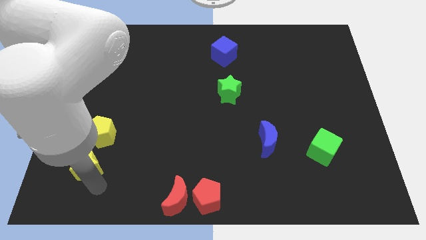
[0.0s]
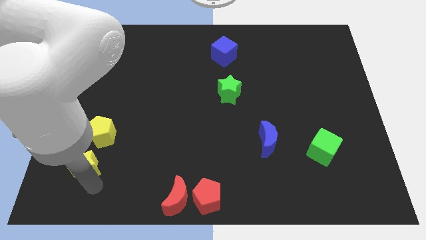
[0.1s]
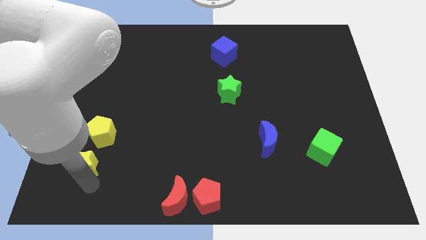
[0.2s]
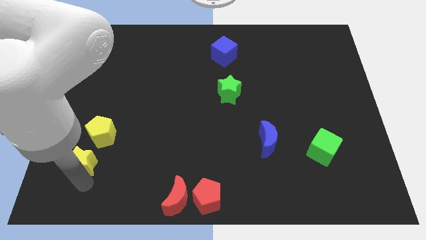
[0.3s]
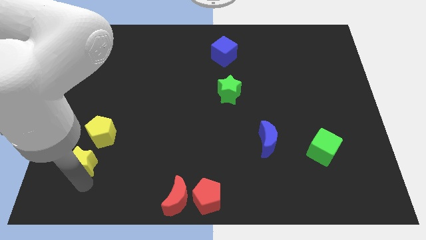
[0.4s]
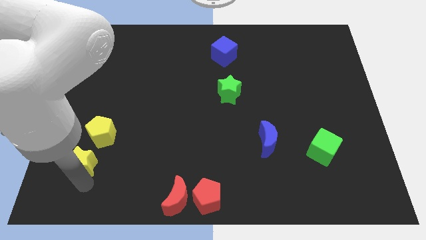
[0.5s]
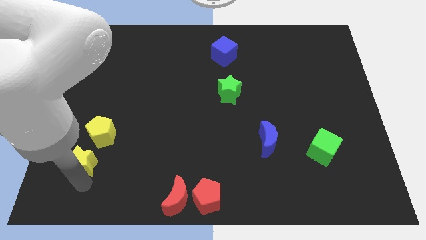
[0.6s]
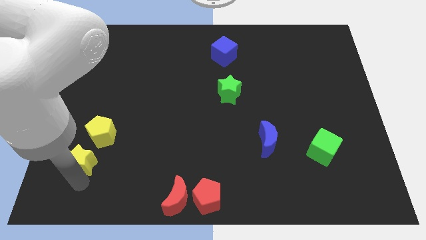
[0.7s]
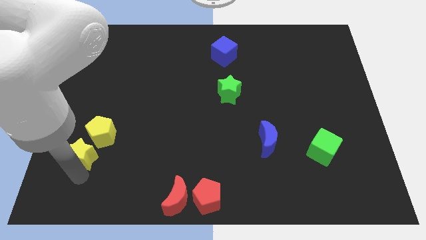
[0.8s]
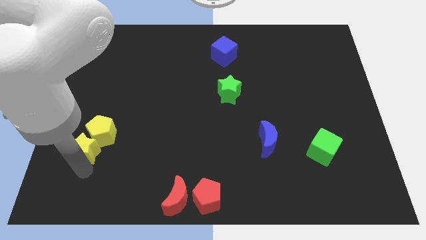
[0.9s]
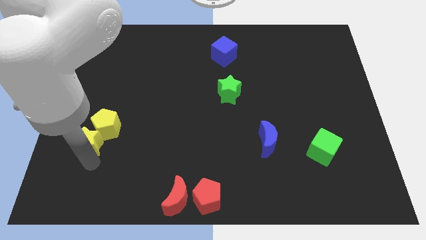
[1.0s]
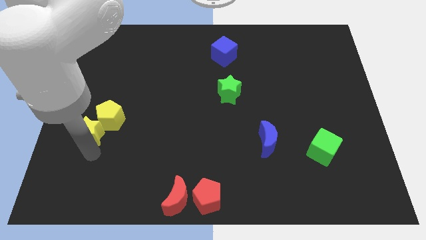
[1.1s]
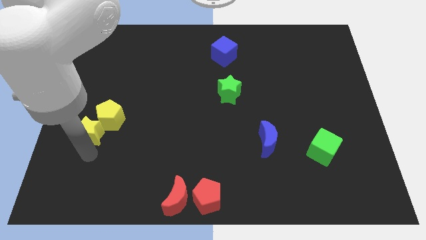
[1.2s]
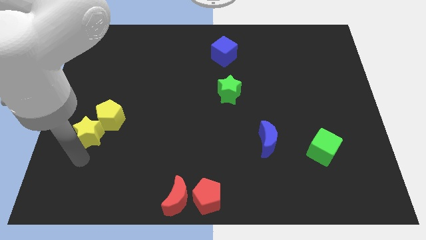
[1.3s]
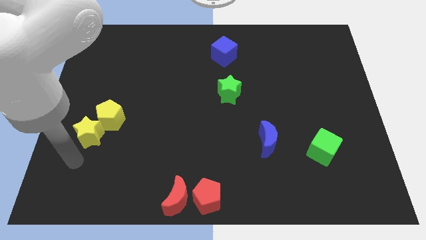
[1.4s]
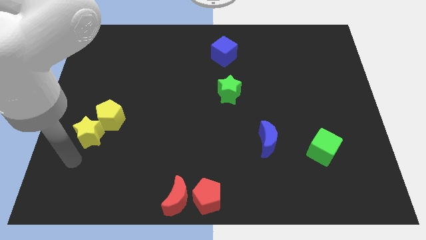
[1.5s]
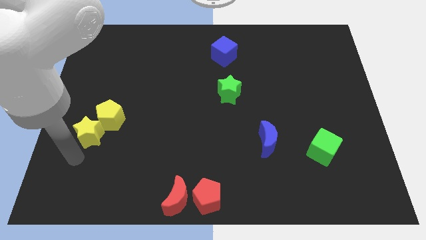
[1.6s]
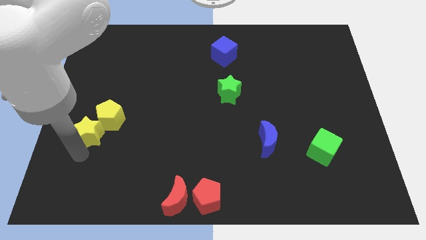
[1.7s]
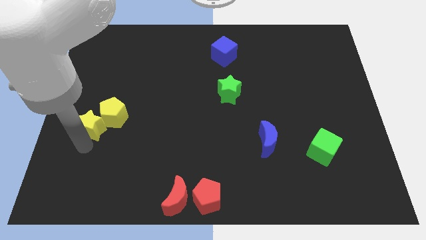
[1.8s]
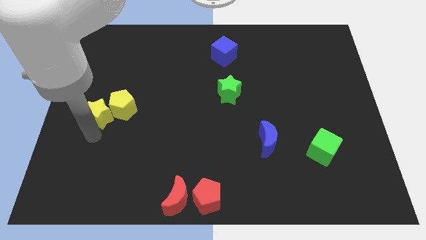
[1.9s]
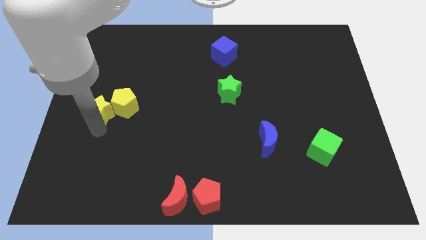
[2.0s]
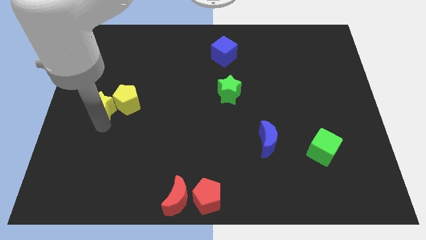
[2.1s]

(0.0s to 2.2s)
push the yellow star into the yellow pentagon

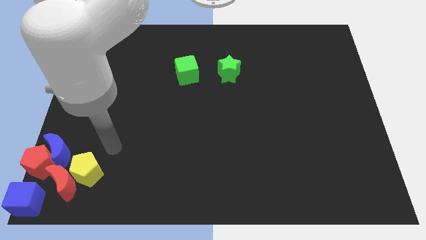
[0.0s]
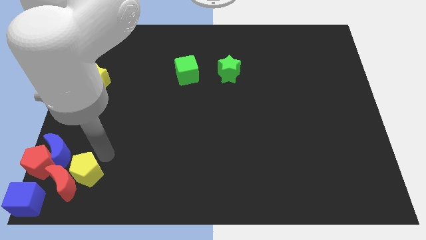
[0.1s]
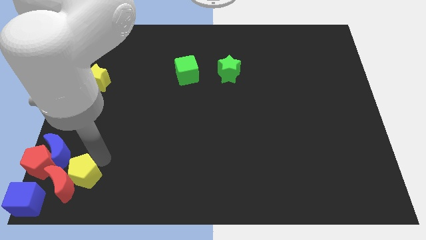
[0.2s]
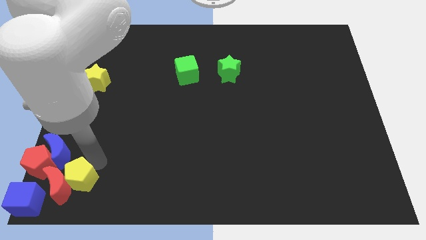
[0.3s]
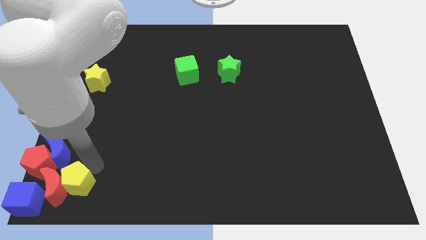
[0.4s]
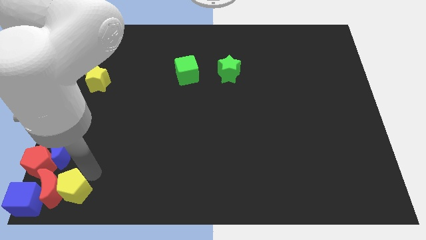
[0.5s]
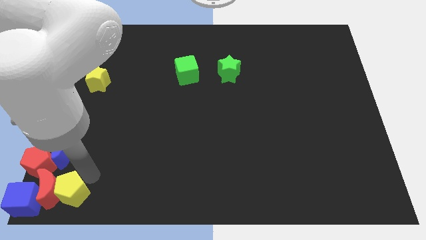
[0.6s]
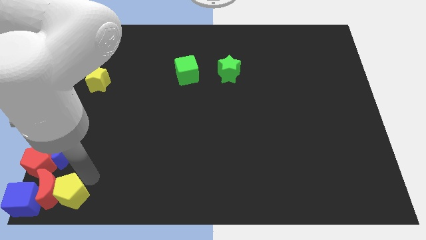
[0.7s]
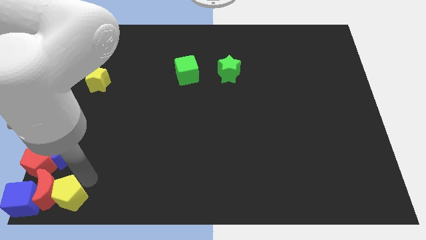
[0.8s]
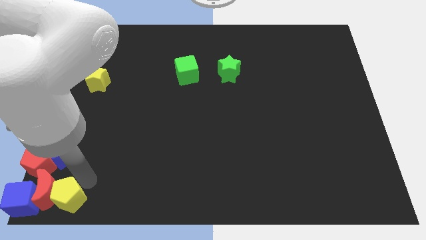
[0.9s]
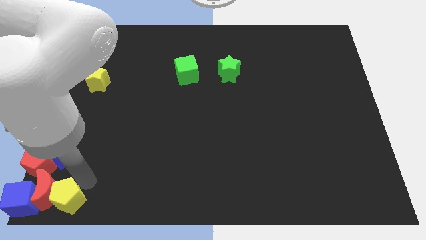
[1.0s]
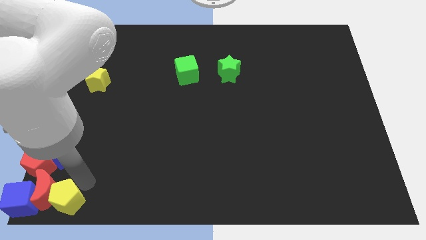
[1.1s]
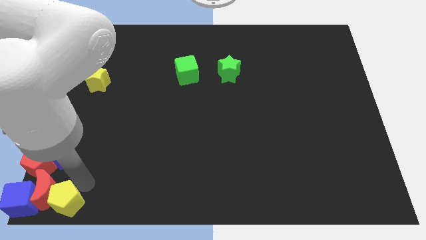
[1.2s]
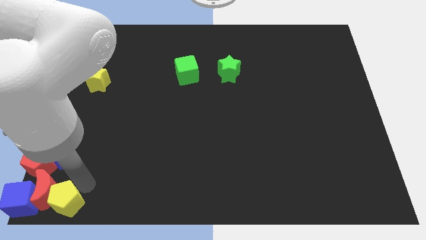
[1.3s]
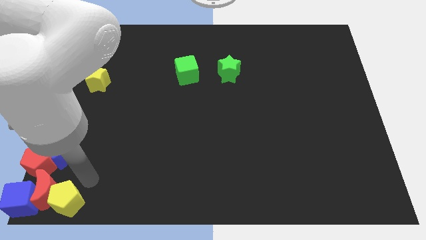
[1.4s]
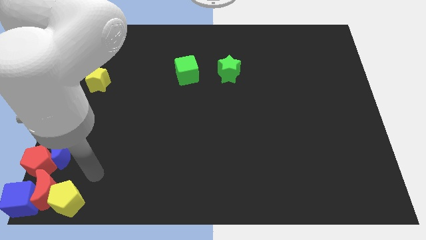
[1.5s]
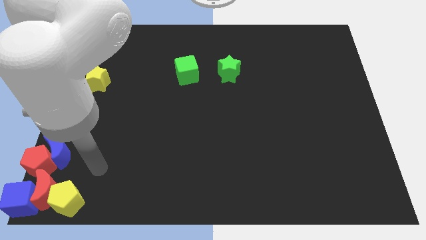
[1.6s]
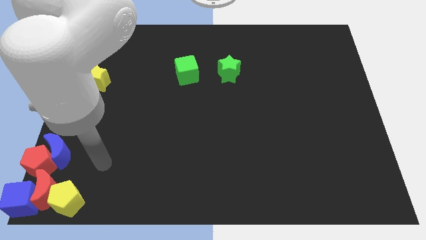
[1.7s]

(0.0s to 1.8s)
push red moonyellow pentagon into the blue cube

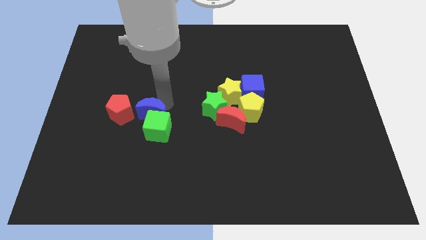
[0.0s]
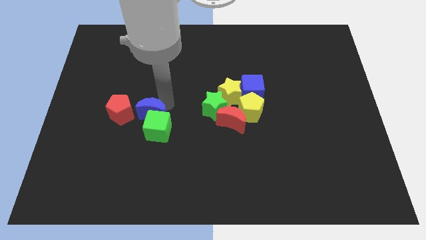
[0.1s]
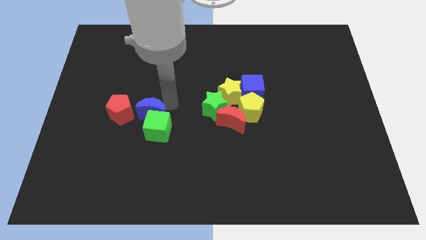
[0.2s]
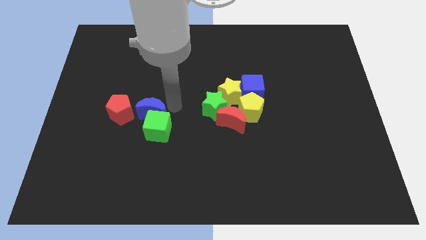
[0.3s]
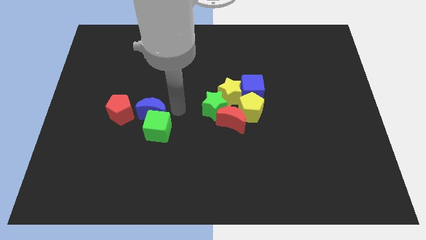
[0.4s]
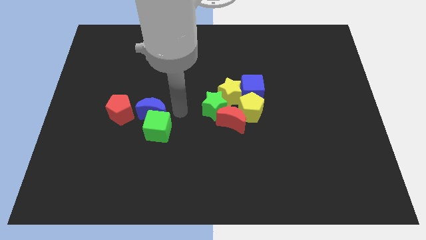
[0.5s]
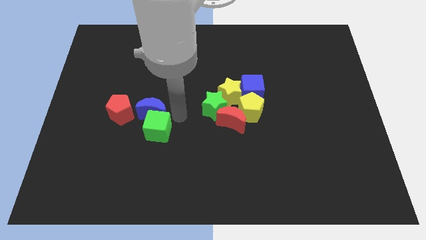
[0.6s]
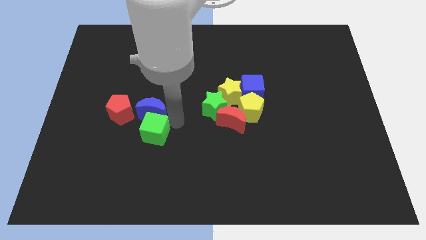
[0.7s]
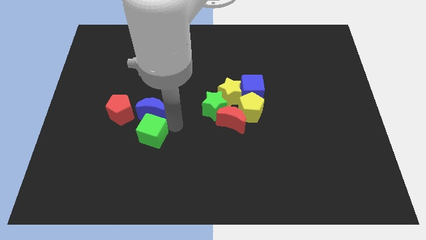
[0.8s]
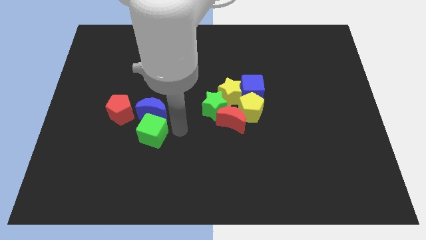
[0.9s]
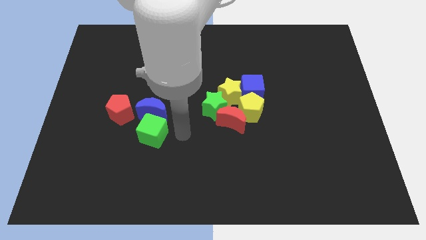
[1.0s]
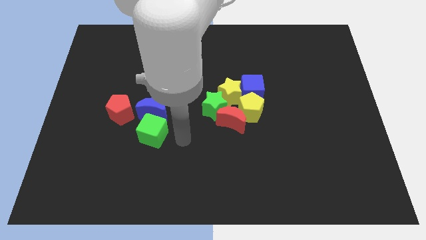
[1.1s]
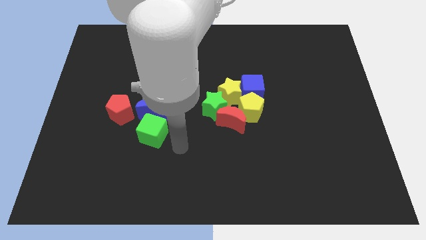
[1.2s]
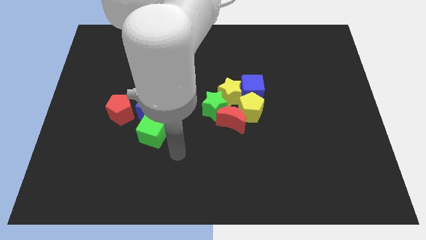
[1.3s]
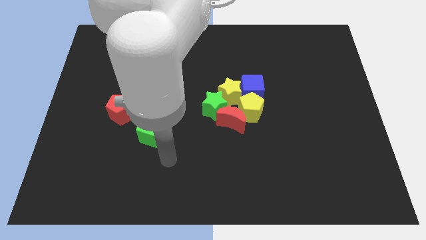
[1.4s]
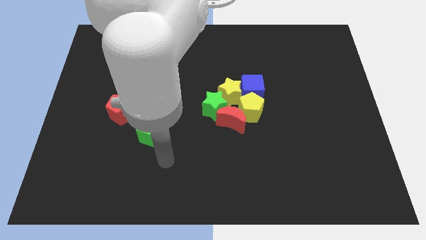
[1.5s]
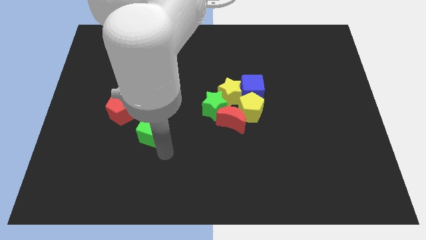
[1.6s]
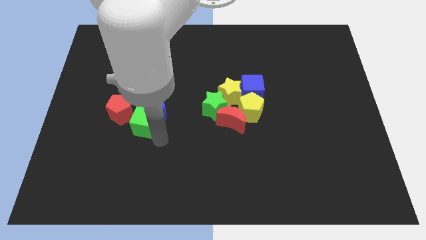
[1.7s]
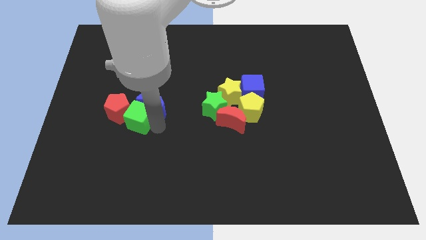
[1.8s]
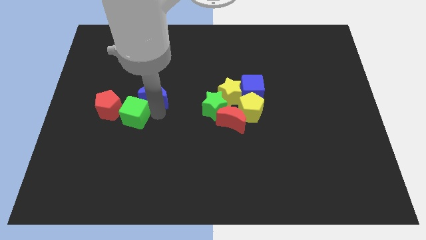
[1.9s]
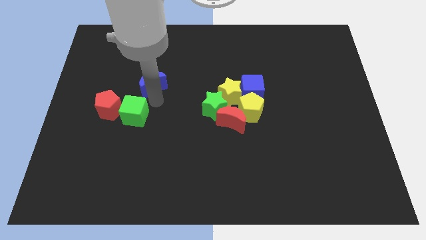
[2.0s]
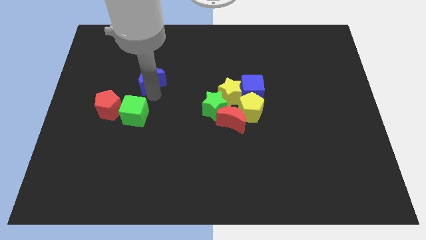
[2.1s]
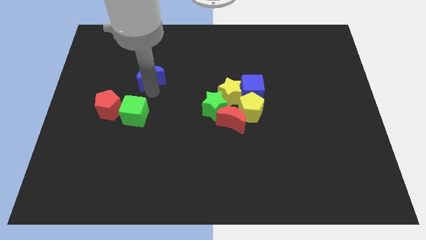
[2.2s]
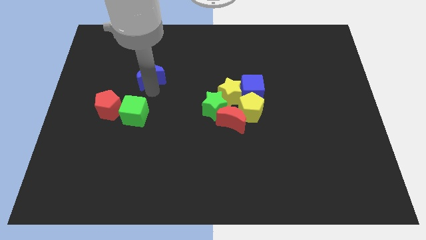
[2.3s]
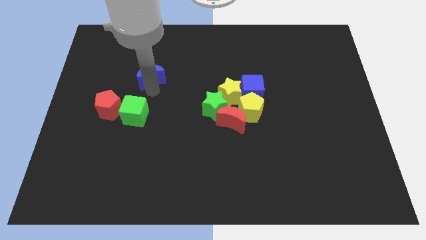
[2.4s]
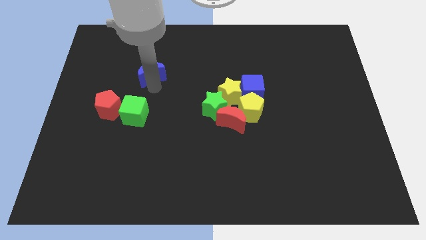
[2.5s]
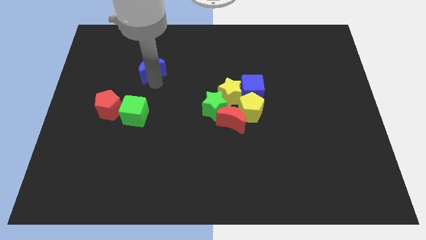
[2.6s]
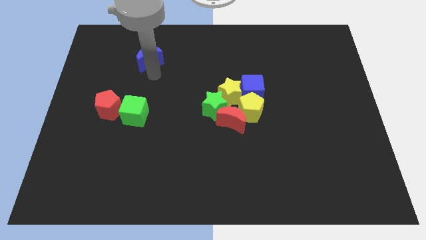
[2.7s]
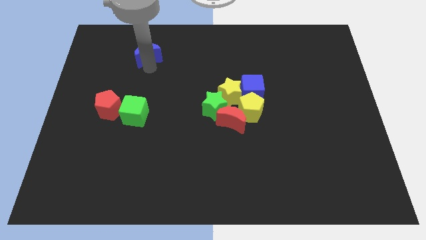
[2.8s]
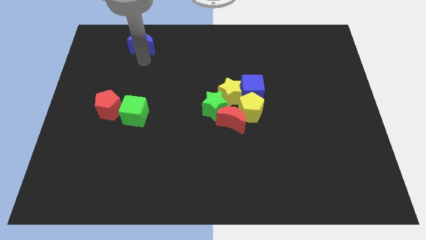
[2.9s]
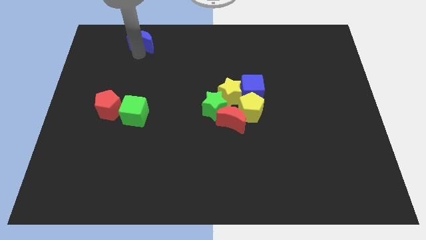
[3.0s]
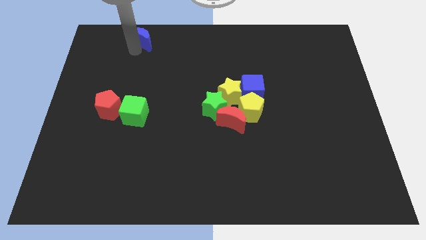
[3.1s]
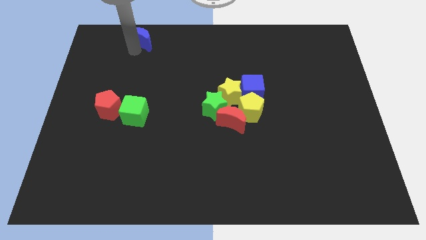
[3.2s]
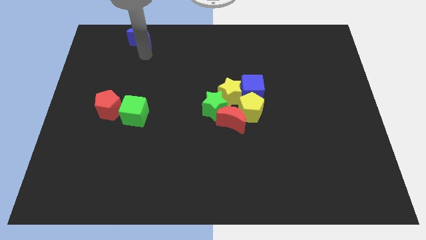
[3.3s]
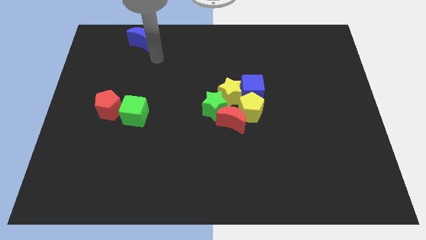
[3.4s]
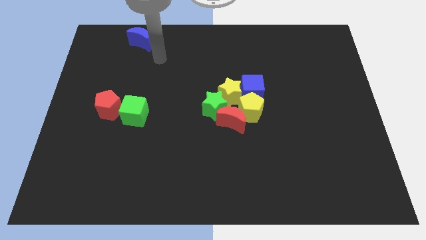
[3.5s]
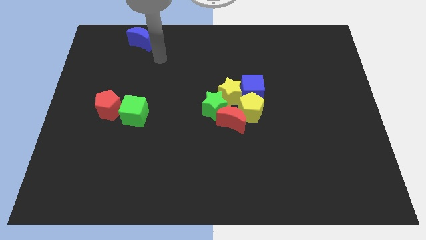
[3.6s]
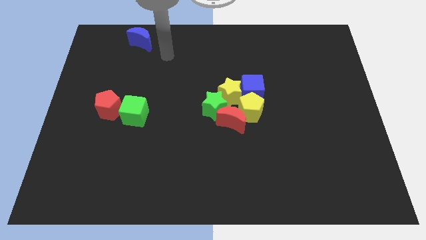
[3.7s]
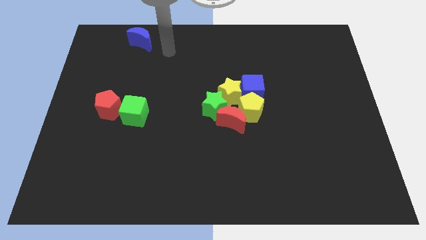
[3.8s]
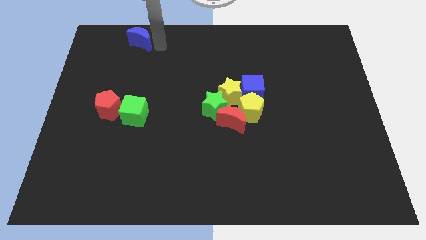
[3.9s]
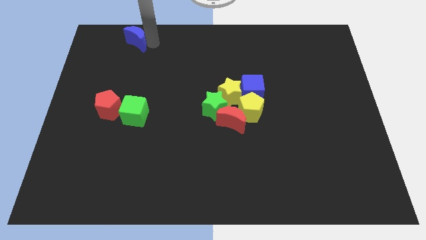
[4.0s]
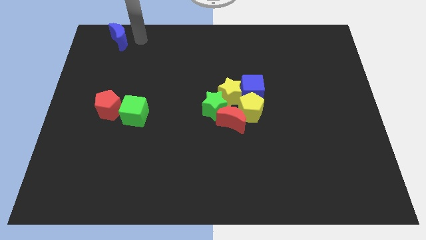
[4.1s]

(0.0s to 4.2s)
move blue moon to the top side

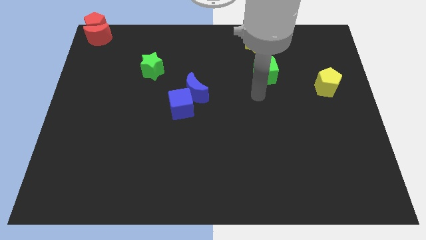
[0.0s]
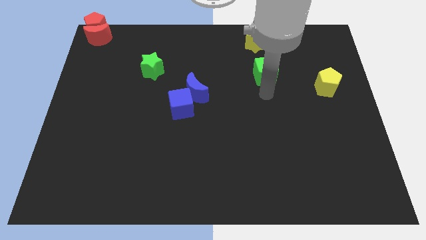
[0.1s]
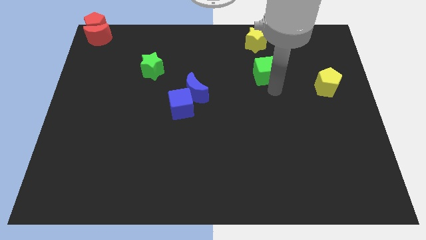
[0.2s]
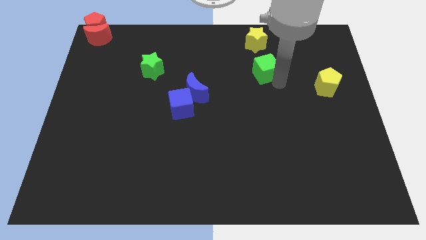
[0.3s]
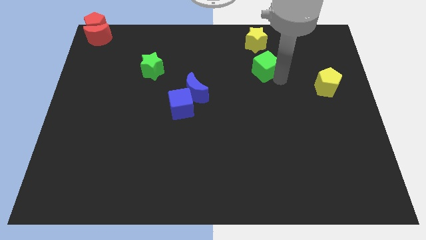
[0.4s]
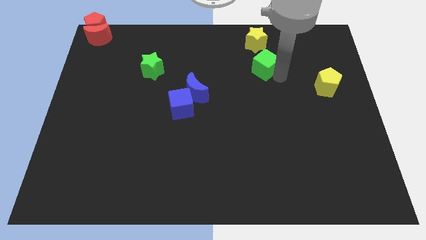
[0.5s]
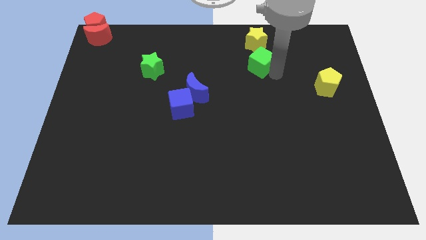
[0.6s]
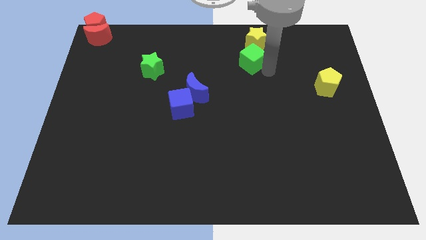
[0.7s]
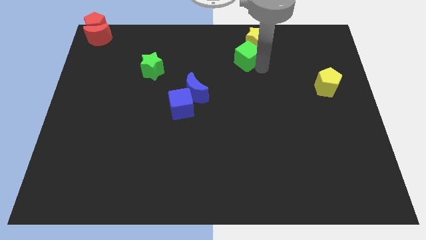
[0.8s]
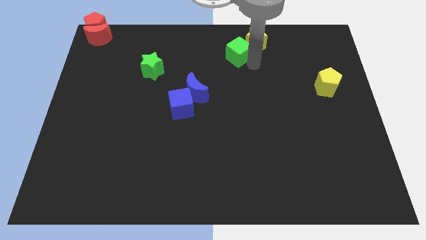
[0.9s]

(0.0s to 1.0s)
move green cube slightly up
